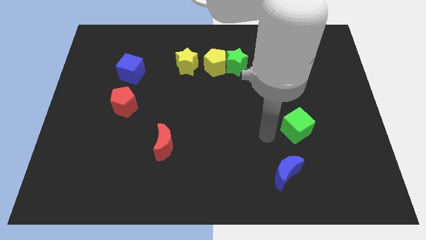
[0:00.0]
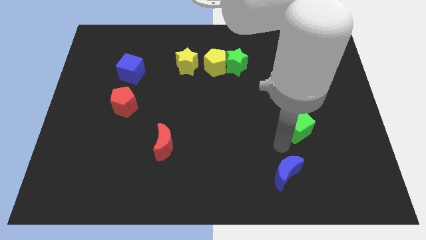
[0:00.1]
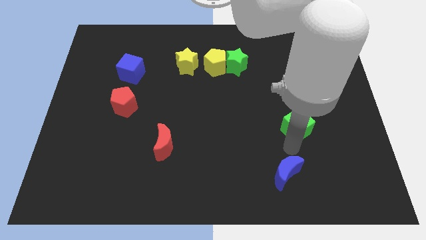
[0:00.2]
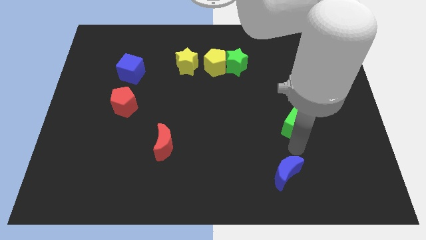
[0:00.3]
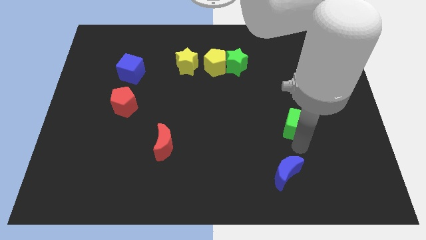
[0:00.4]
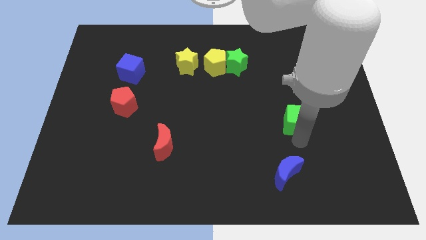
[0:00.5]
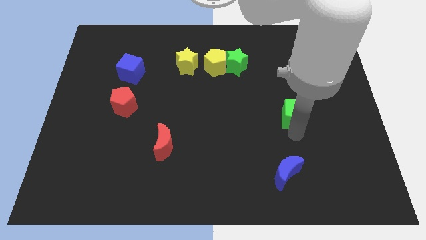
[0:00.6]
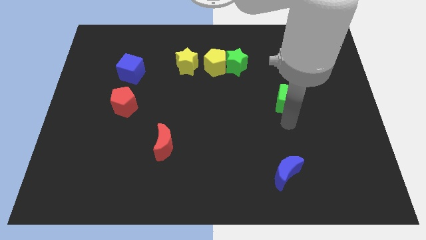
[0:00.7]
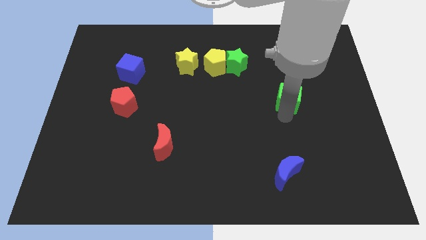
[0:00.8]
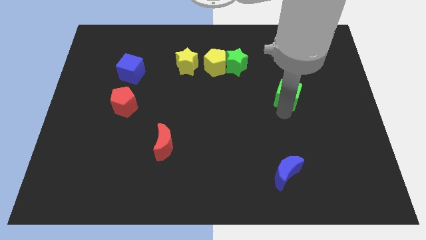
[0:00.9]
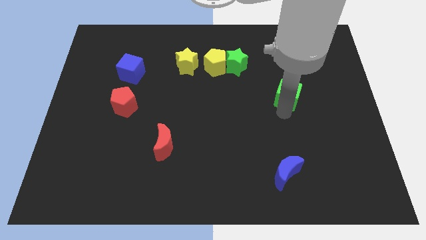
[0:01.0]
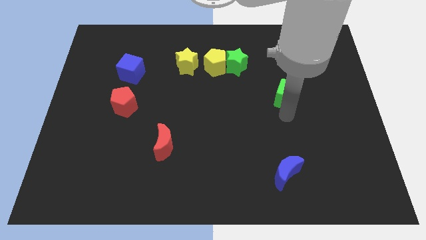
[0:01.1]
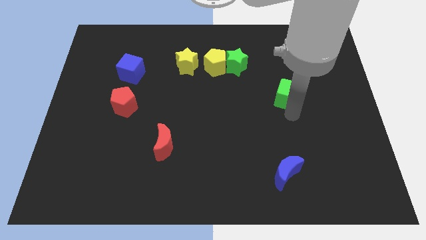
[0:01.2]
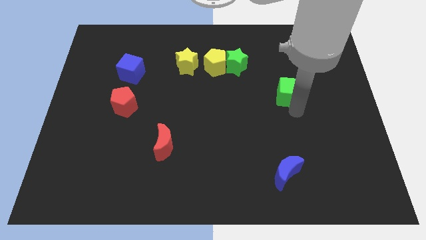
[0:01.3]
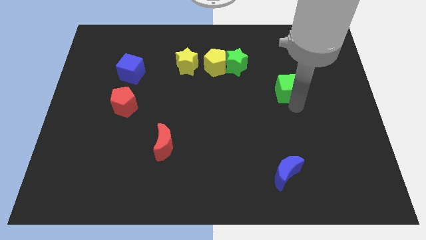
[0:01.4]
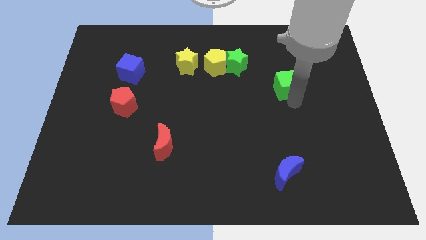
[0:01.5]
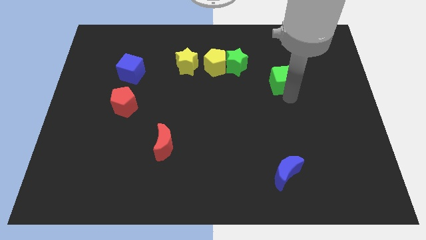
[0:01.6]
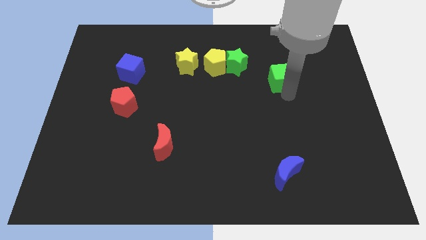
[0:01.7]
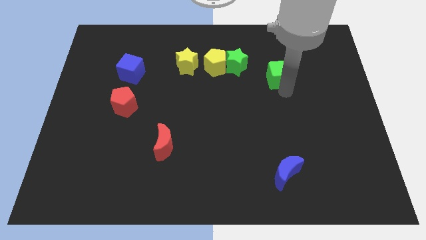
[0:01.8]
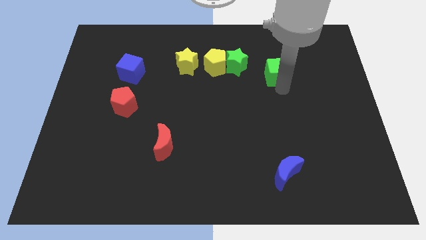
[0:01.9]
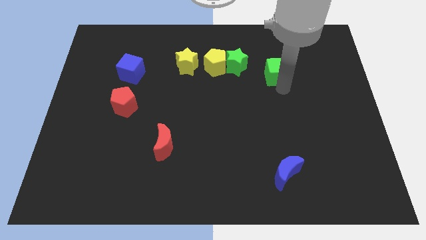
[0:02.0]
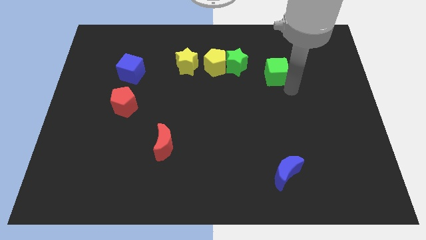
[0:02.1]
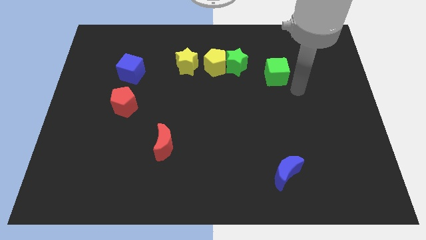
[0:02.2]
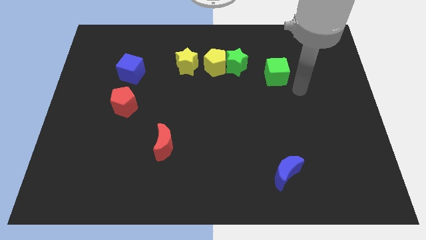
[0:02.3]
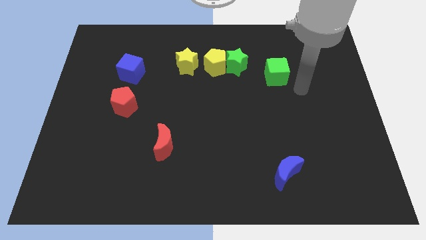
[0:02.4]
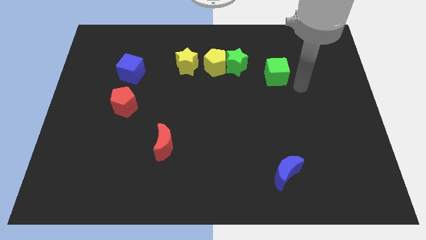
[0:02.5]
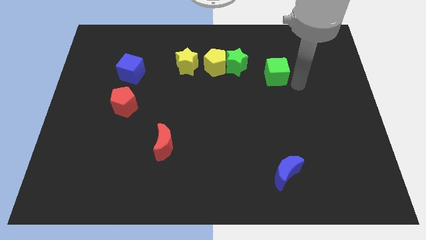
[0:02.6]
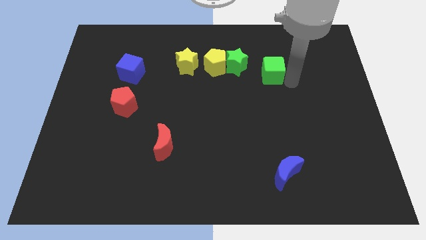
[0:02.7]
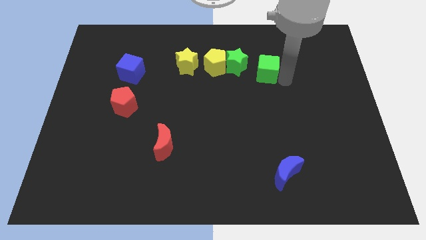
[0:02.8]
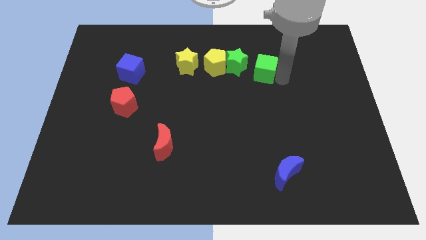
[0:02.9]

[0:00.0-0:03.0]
push green cube upwards

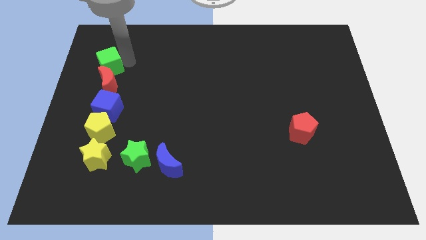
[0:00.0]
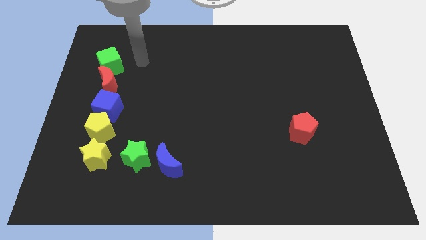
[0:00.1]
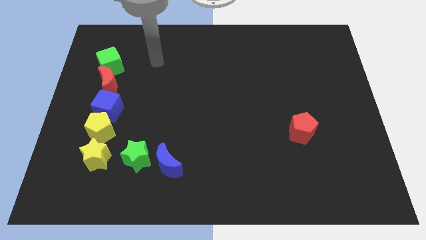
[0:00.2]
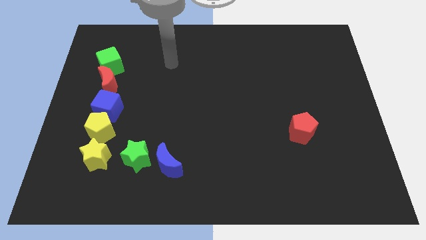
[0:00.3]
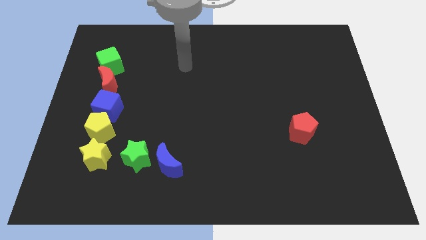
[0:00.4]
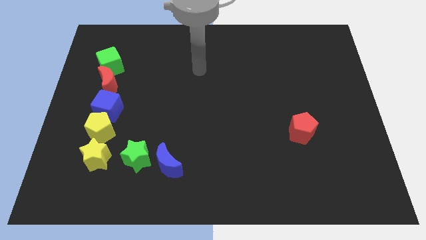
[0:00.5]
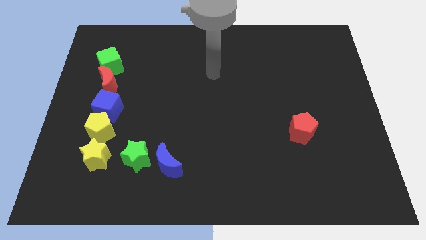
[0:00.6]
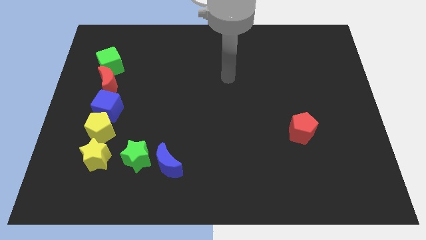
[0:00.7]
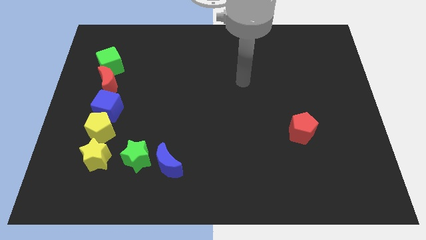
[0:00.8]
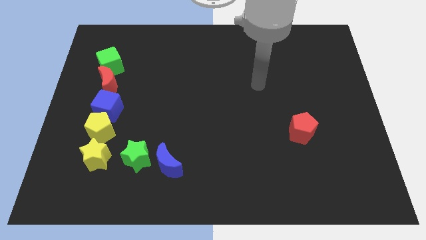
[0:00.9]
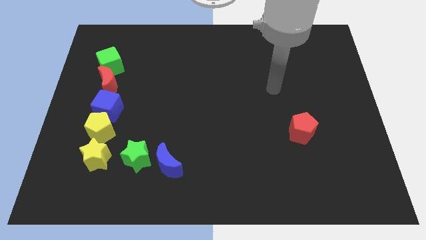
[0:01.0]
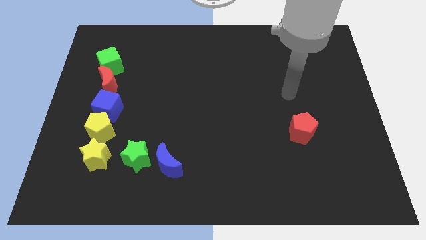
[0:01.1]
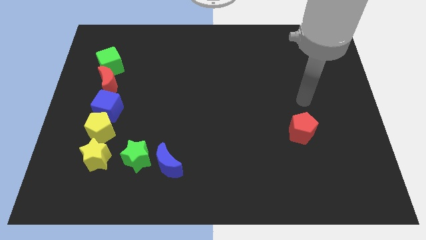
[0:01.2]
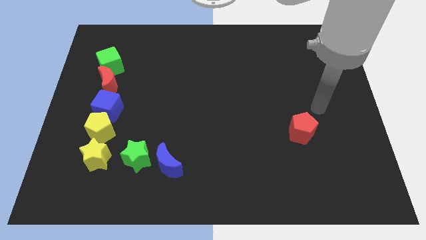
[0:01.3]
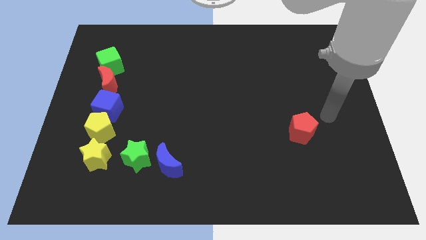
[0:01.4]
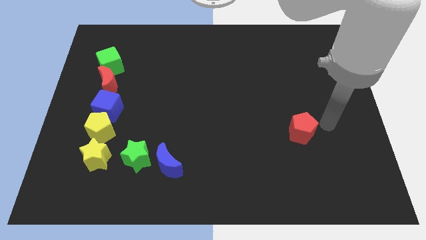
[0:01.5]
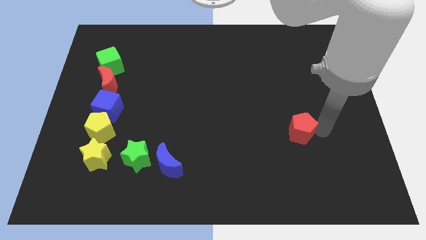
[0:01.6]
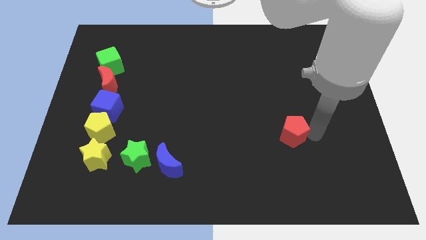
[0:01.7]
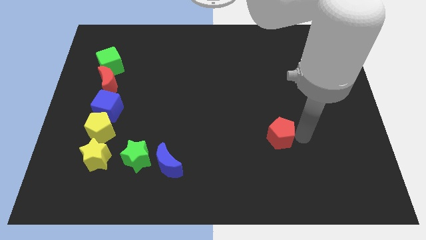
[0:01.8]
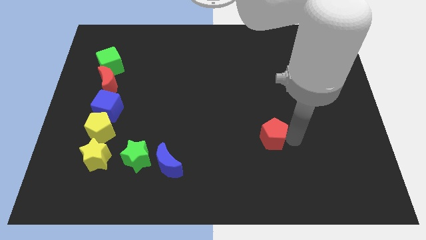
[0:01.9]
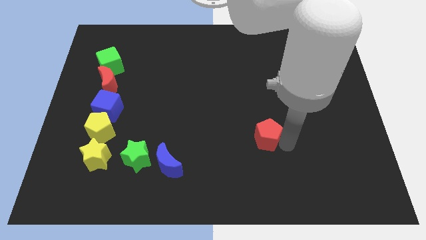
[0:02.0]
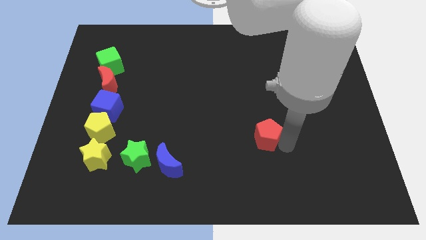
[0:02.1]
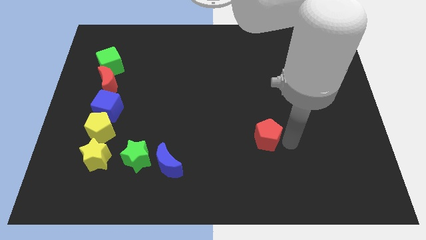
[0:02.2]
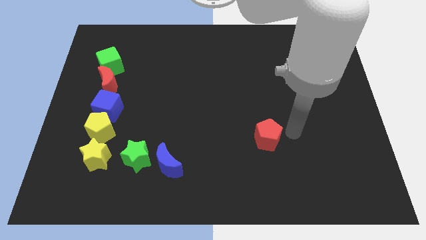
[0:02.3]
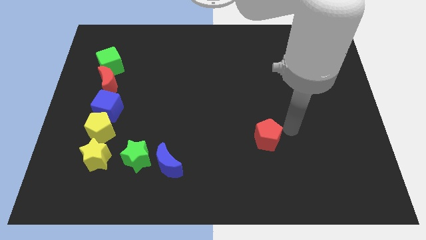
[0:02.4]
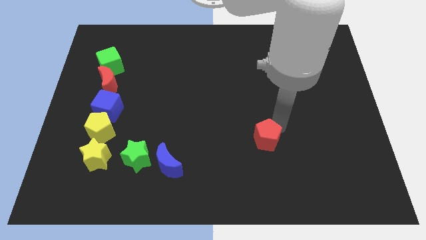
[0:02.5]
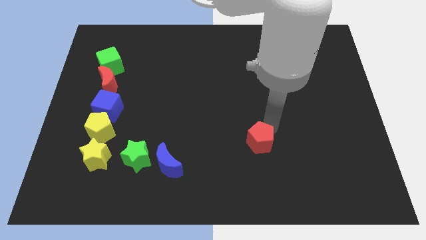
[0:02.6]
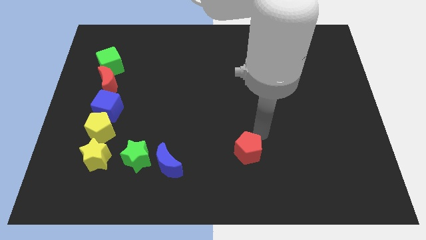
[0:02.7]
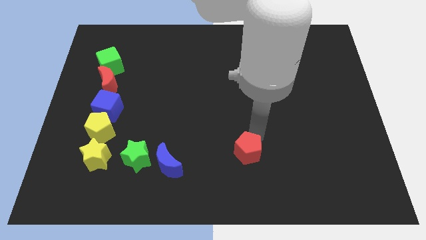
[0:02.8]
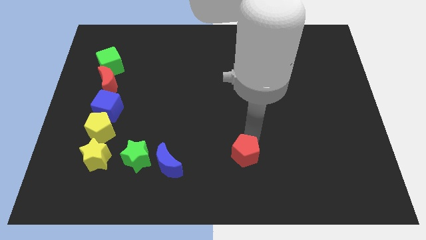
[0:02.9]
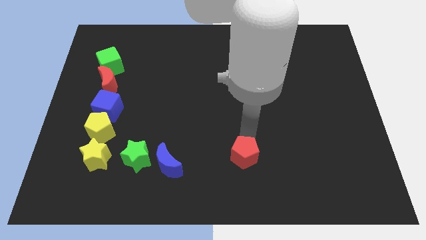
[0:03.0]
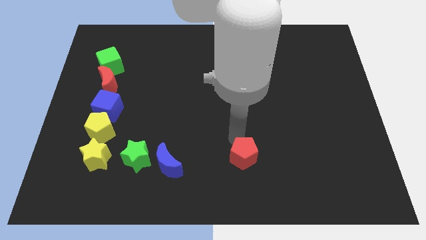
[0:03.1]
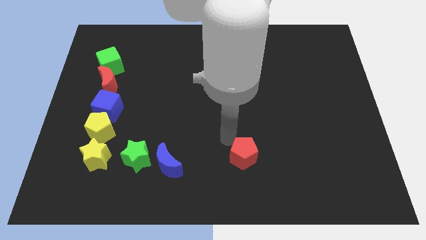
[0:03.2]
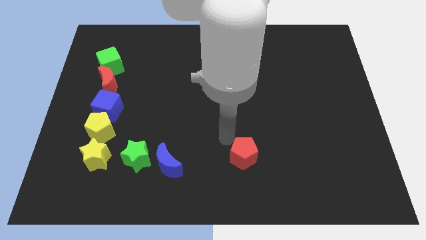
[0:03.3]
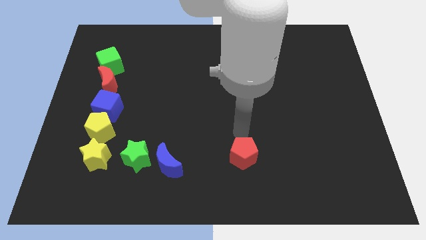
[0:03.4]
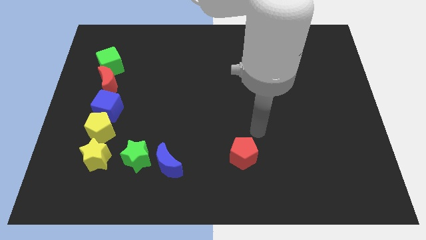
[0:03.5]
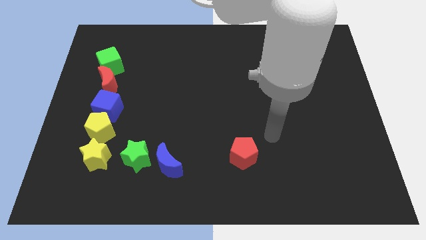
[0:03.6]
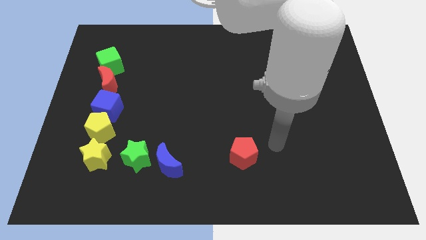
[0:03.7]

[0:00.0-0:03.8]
push the red pentagon to the center

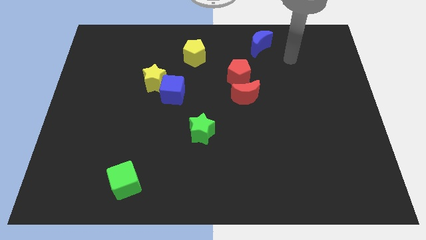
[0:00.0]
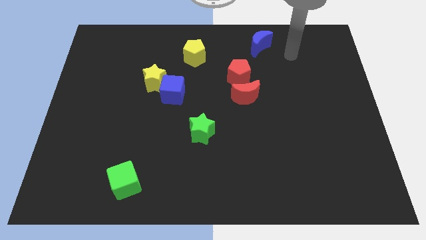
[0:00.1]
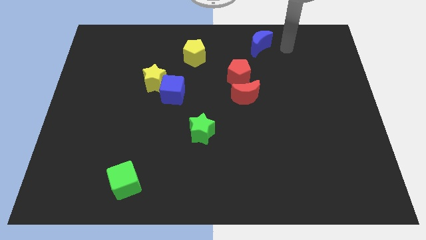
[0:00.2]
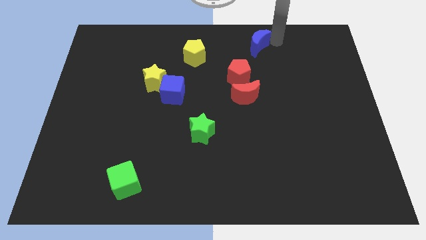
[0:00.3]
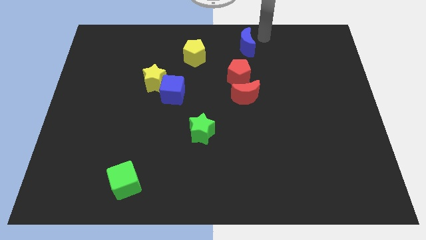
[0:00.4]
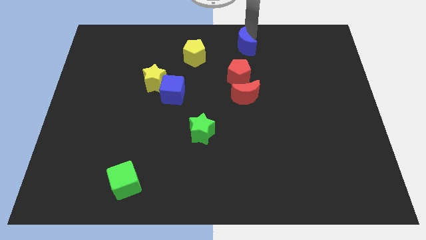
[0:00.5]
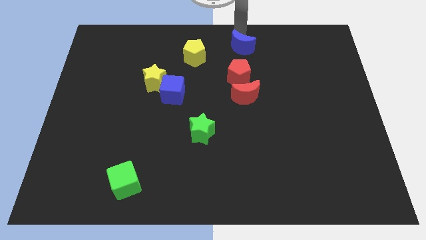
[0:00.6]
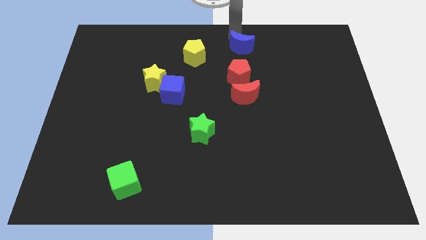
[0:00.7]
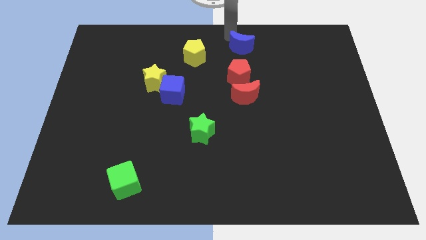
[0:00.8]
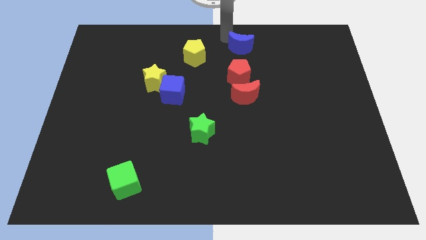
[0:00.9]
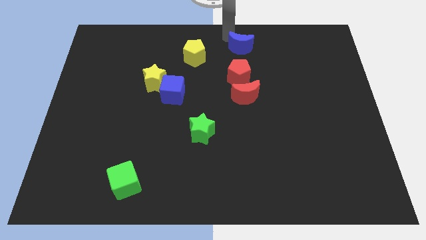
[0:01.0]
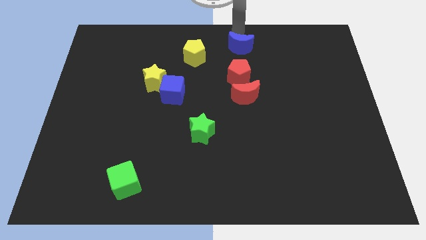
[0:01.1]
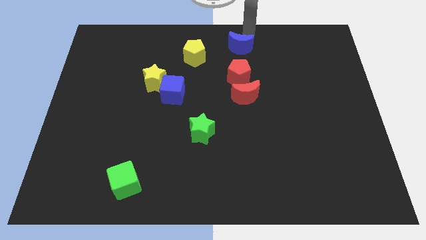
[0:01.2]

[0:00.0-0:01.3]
place the blue moon in between yellow pentagon and red pentagon

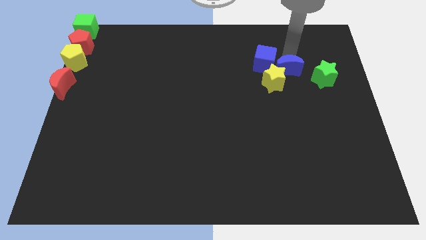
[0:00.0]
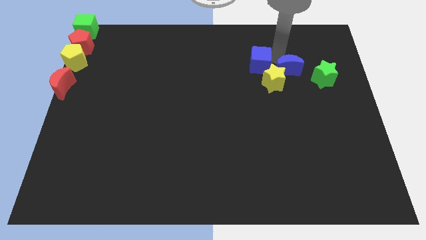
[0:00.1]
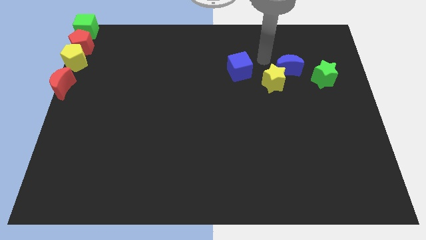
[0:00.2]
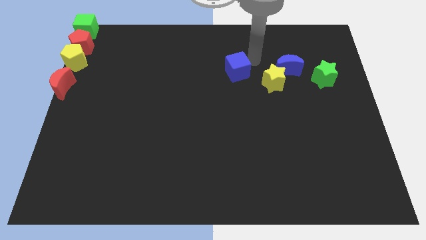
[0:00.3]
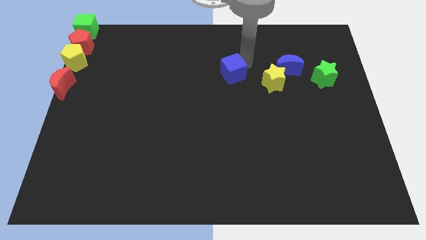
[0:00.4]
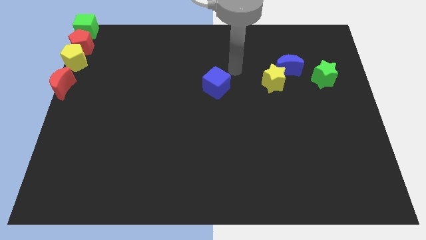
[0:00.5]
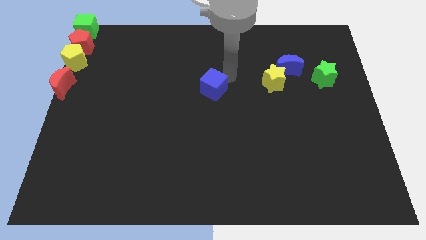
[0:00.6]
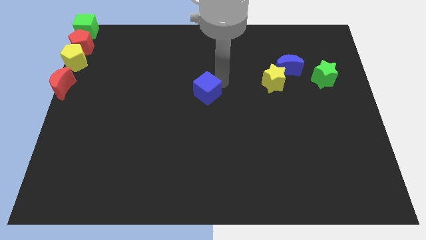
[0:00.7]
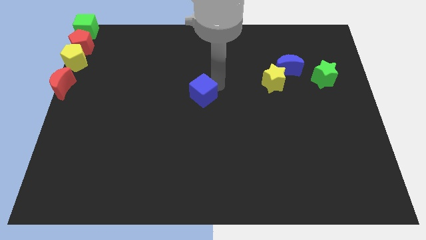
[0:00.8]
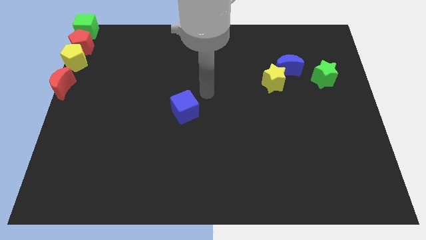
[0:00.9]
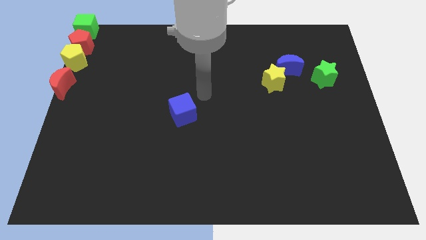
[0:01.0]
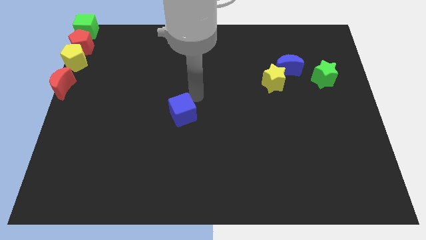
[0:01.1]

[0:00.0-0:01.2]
separate blue cube from blue moon
